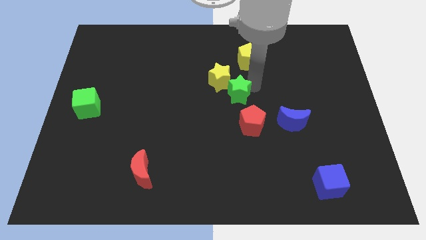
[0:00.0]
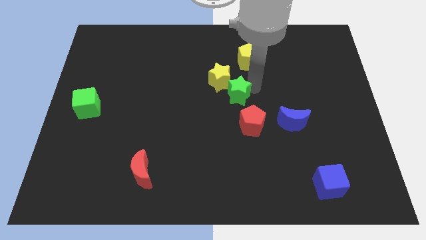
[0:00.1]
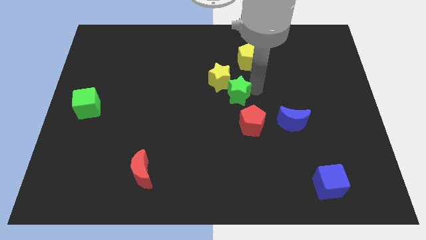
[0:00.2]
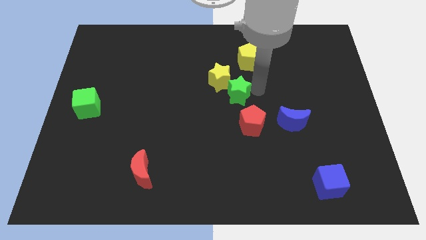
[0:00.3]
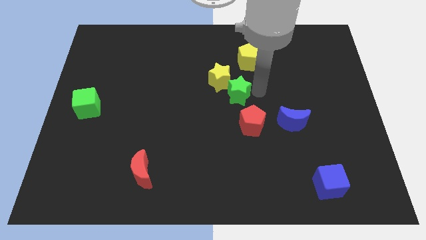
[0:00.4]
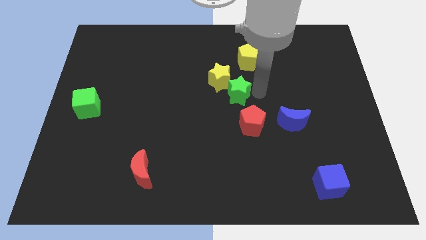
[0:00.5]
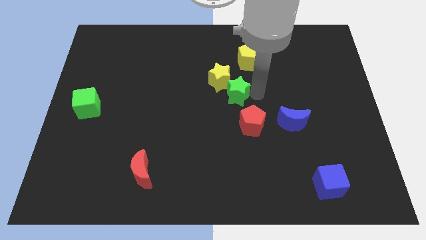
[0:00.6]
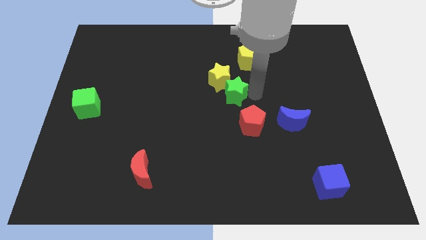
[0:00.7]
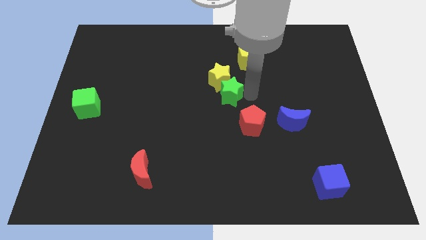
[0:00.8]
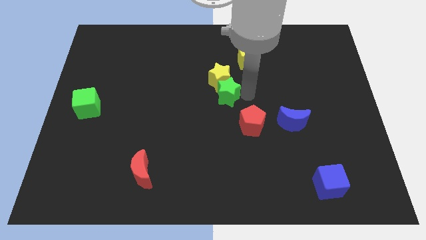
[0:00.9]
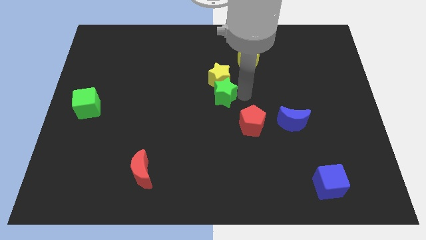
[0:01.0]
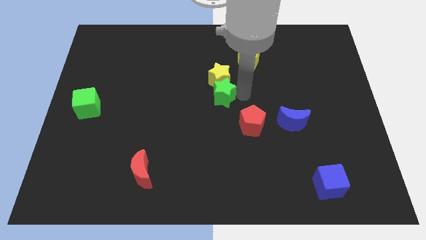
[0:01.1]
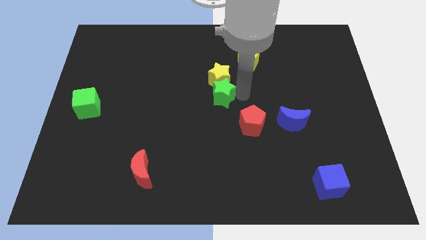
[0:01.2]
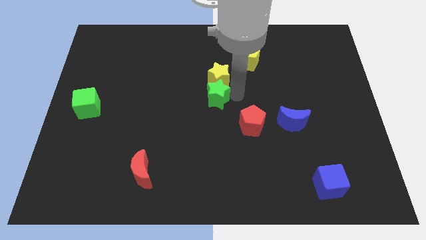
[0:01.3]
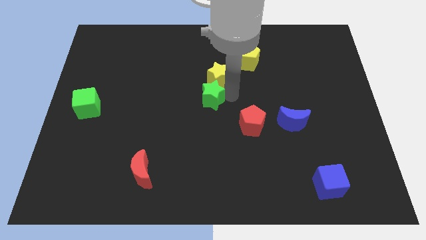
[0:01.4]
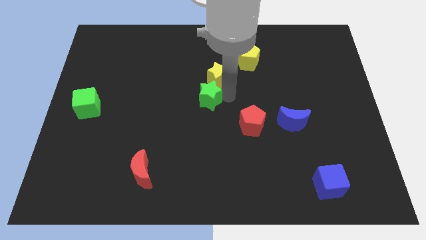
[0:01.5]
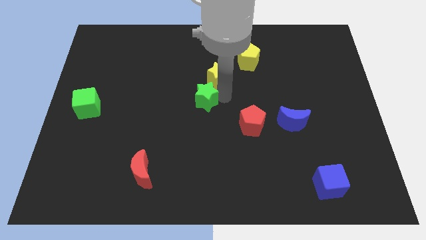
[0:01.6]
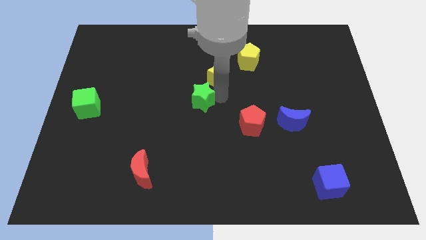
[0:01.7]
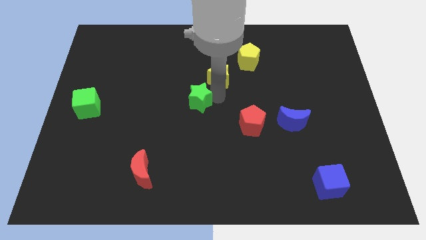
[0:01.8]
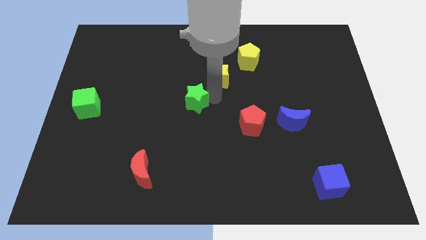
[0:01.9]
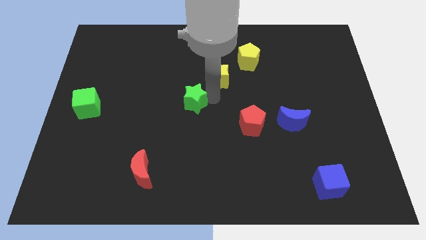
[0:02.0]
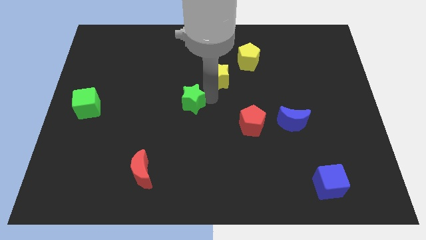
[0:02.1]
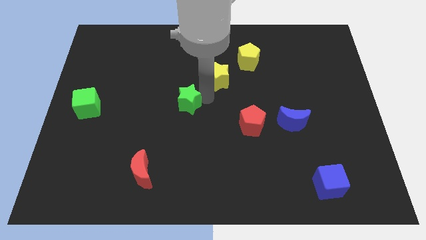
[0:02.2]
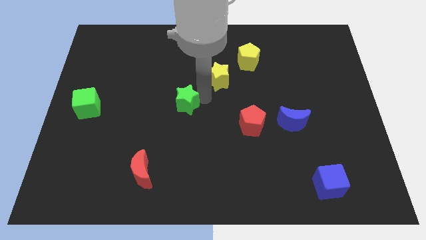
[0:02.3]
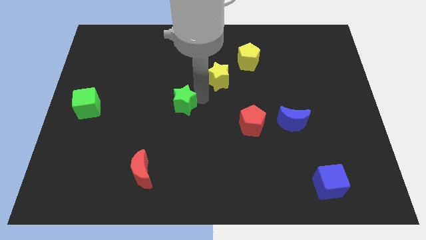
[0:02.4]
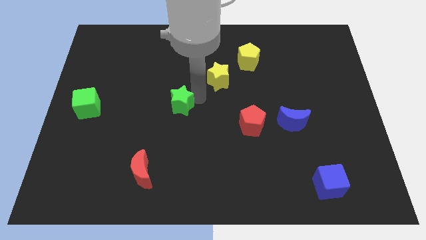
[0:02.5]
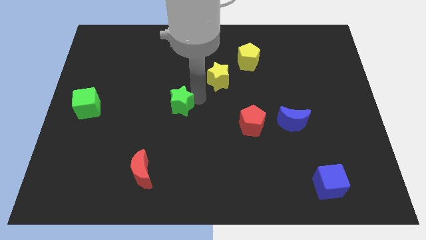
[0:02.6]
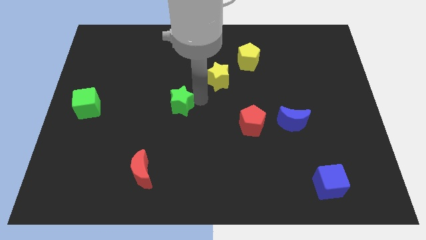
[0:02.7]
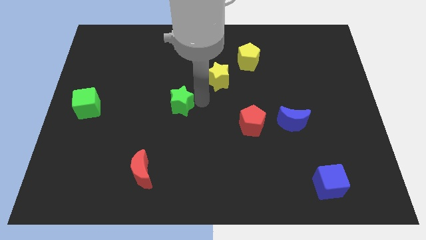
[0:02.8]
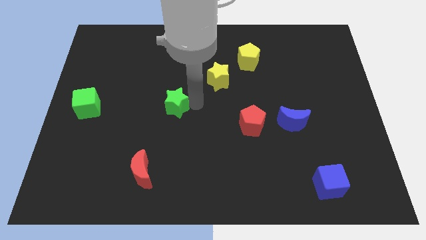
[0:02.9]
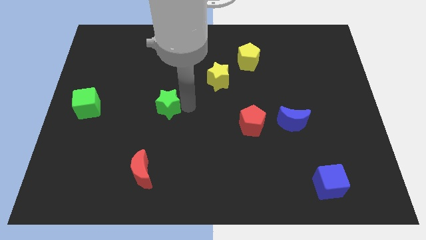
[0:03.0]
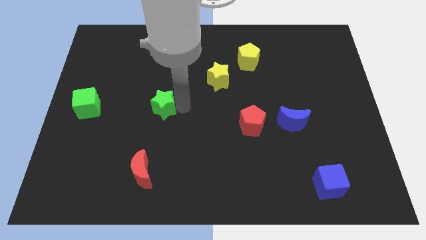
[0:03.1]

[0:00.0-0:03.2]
move the green star towards the left

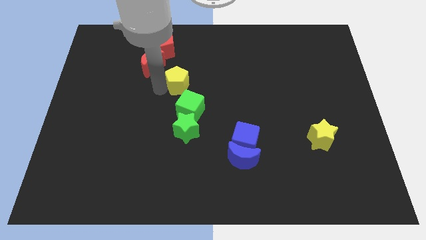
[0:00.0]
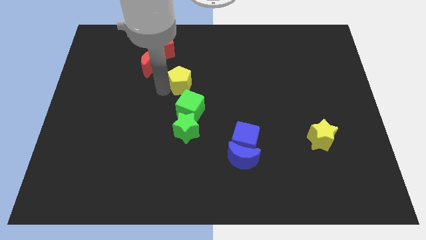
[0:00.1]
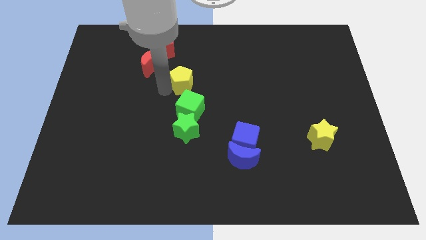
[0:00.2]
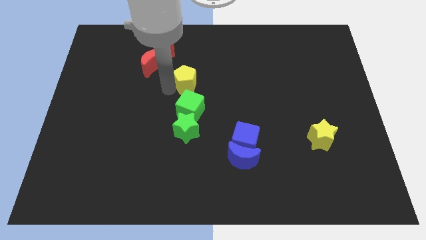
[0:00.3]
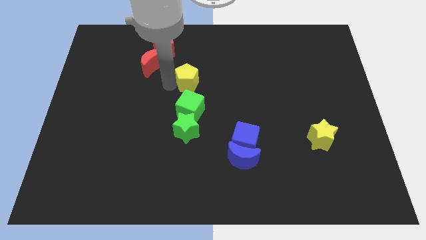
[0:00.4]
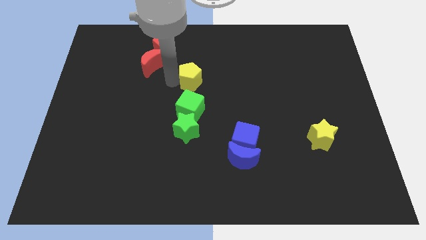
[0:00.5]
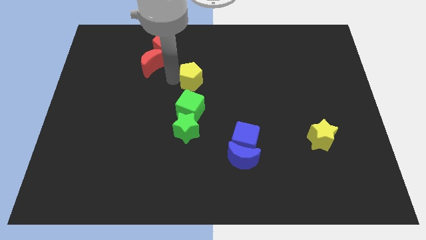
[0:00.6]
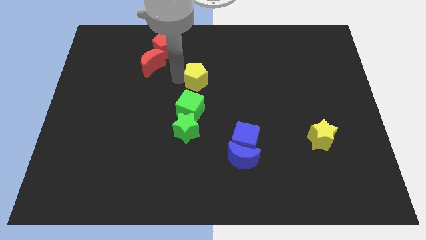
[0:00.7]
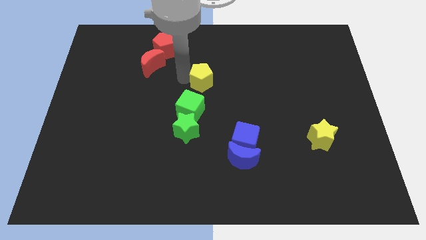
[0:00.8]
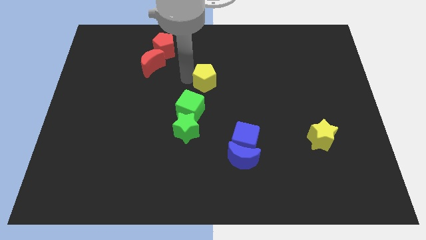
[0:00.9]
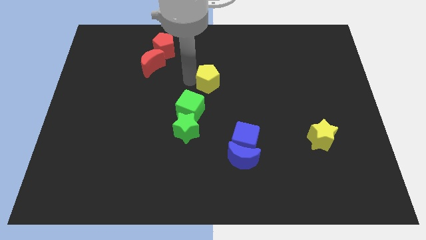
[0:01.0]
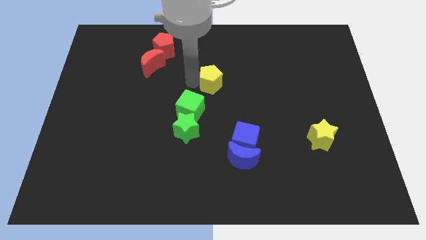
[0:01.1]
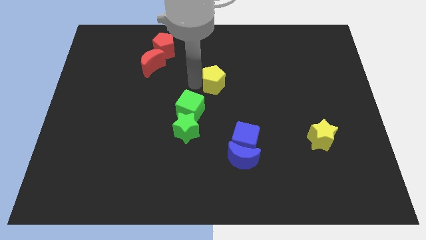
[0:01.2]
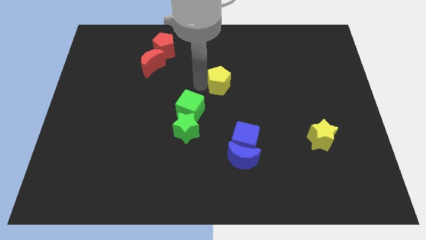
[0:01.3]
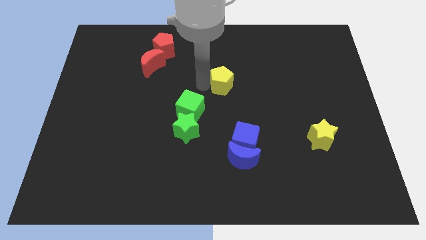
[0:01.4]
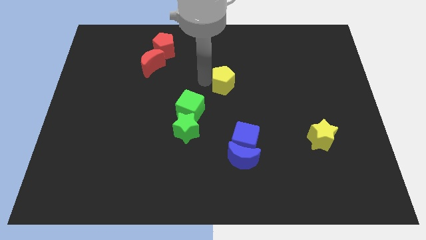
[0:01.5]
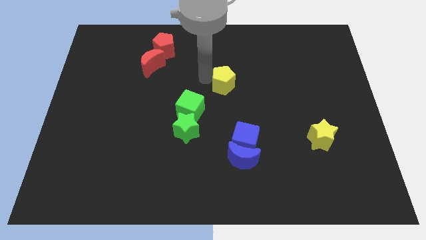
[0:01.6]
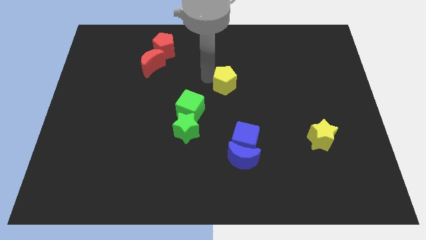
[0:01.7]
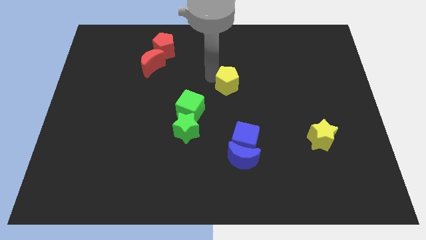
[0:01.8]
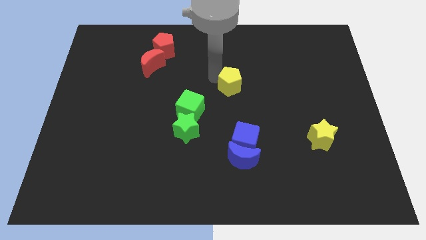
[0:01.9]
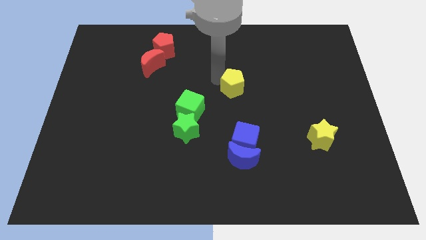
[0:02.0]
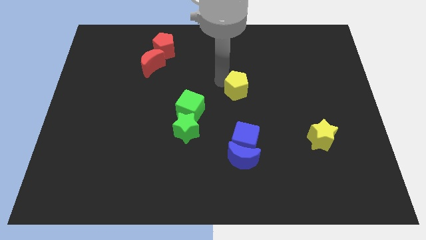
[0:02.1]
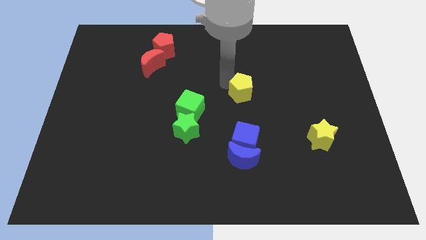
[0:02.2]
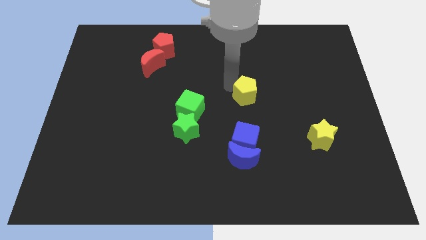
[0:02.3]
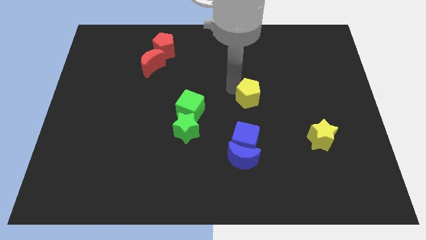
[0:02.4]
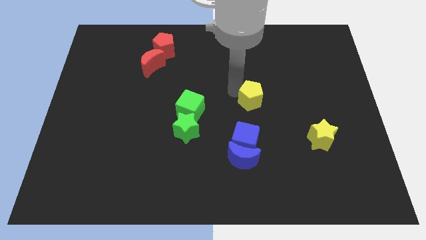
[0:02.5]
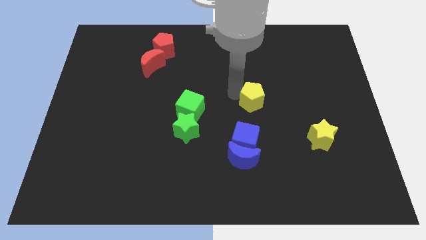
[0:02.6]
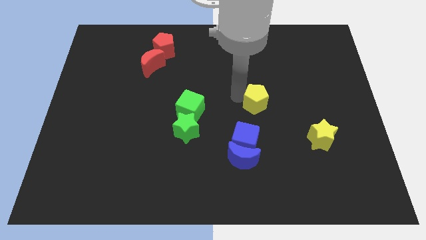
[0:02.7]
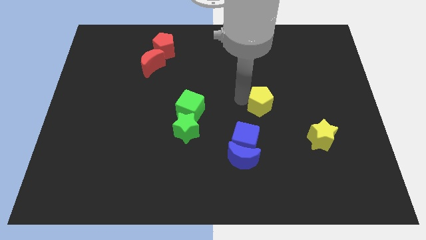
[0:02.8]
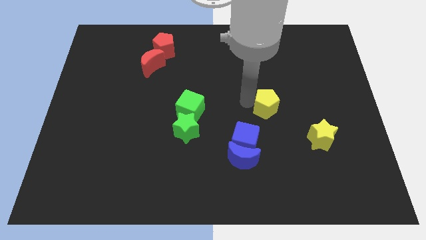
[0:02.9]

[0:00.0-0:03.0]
separate the yellow pentagon from the green cube

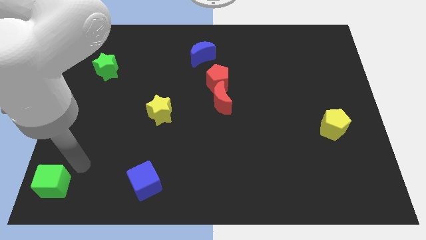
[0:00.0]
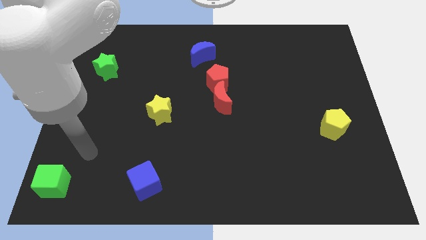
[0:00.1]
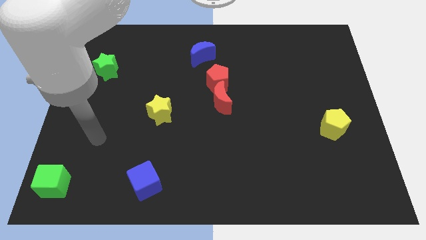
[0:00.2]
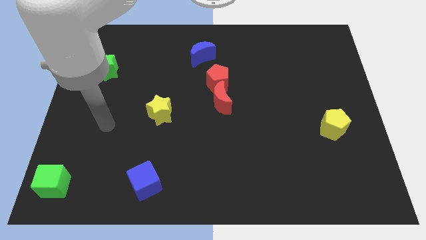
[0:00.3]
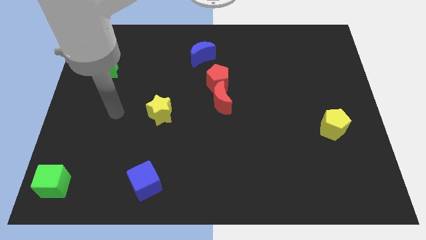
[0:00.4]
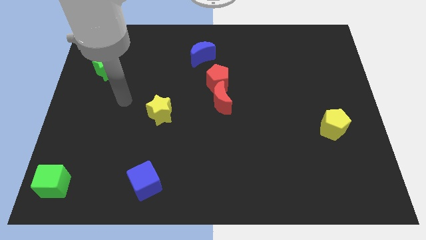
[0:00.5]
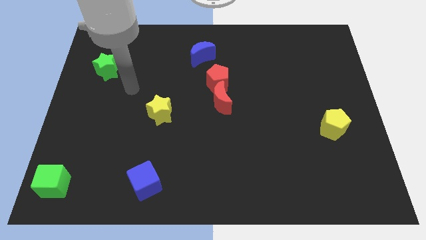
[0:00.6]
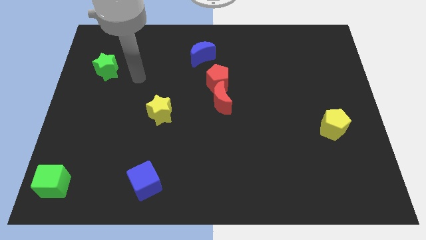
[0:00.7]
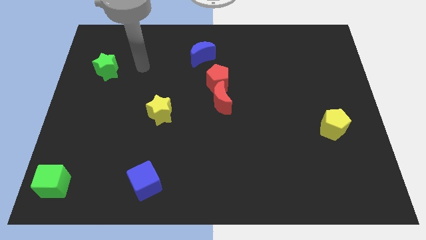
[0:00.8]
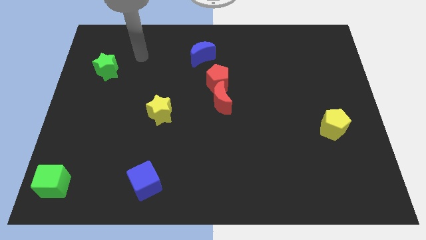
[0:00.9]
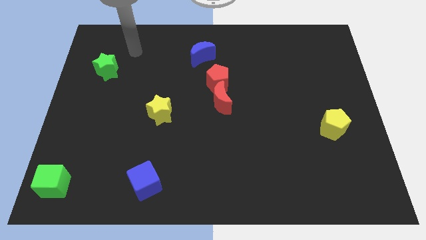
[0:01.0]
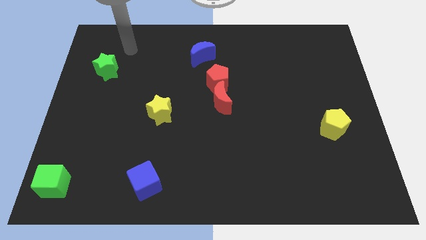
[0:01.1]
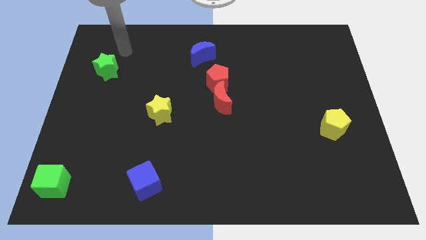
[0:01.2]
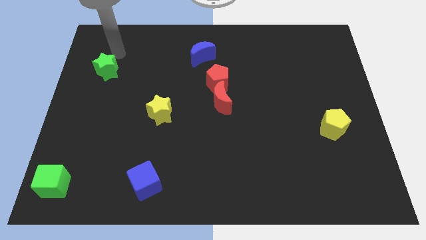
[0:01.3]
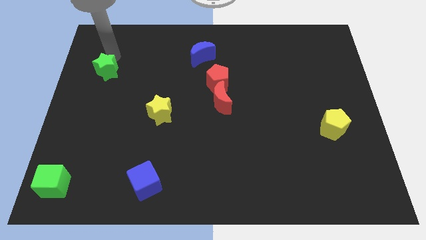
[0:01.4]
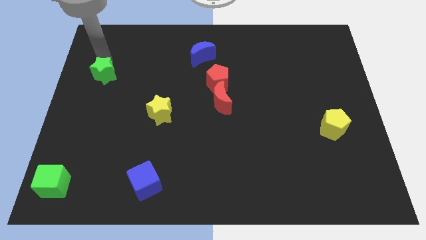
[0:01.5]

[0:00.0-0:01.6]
place your arm above the green star

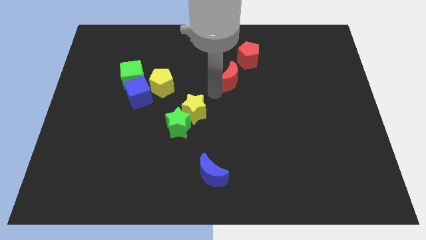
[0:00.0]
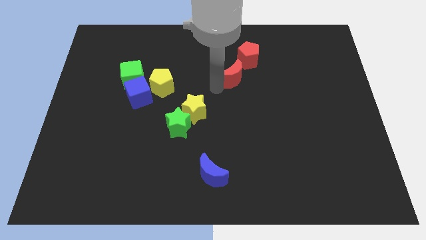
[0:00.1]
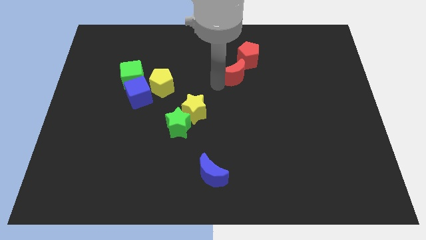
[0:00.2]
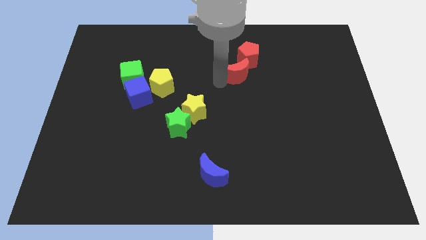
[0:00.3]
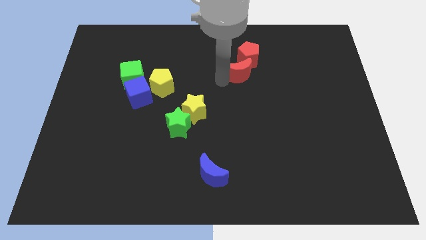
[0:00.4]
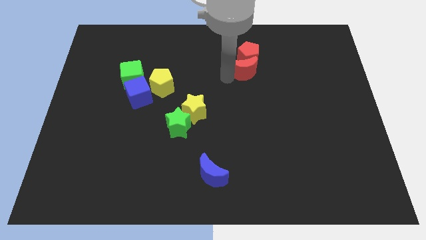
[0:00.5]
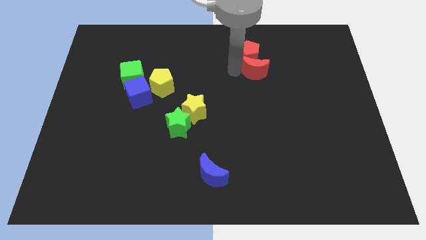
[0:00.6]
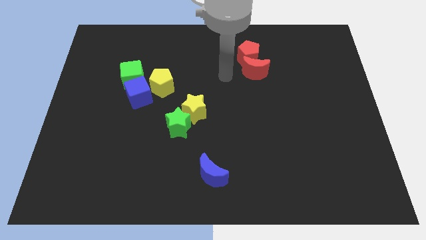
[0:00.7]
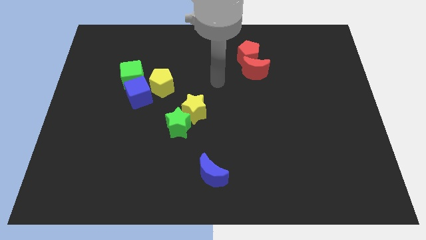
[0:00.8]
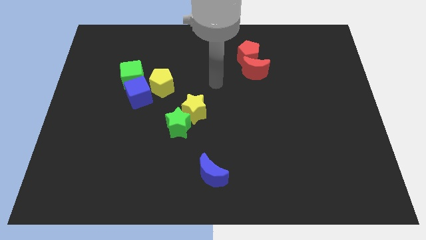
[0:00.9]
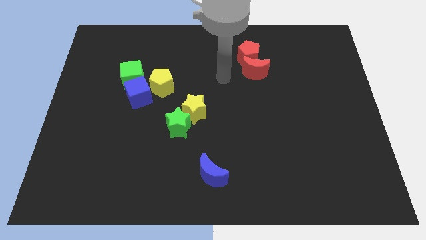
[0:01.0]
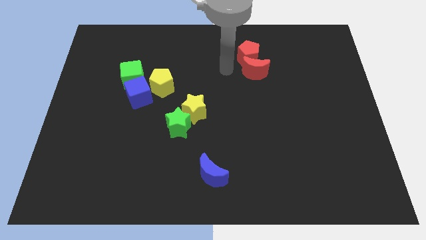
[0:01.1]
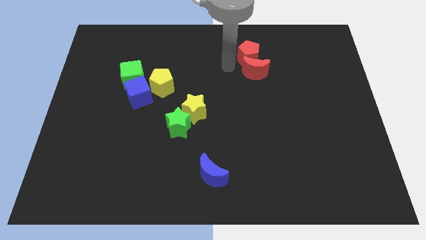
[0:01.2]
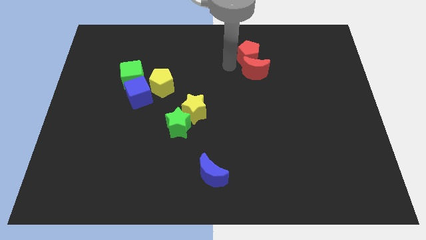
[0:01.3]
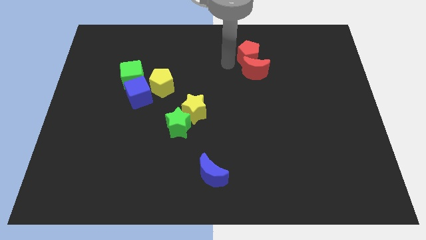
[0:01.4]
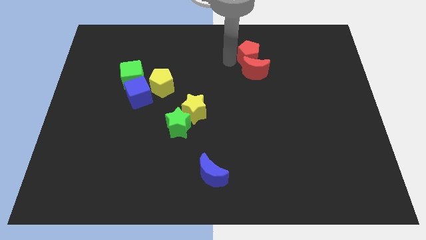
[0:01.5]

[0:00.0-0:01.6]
arrange the red moon at the bottom of the red pentagon
